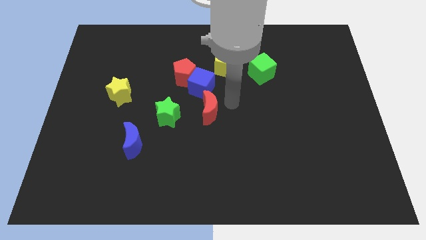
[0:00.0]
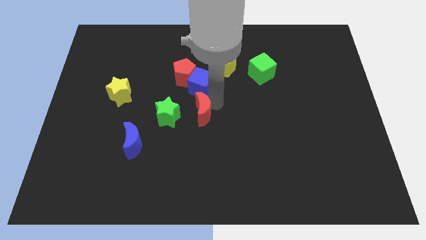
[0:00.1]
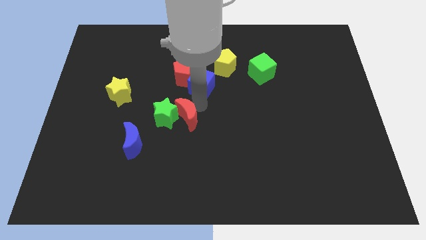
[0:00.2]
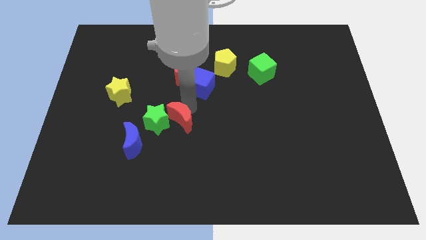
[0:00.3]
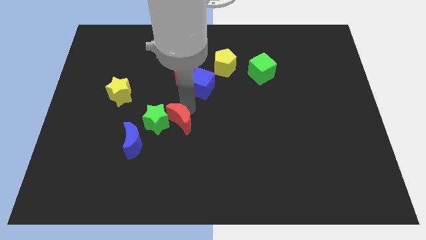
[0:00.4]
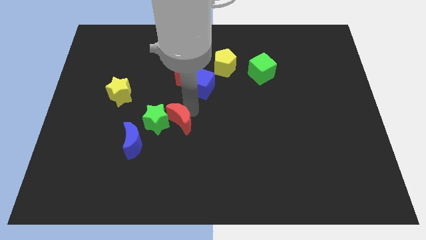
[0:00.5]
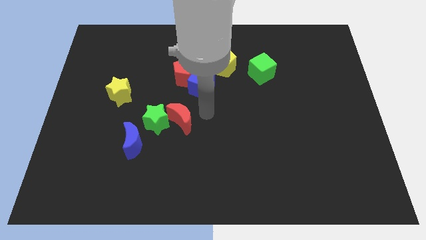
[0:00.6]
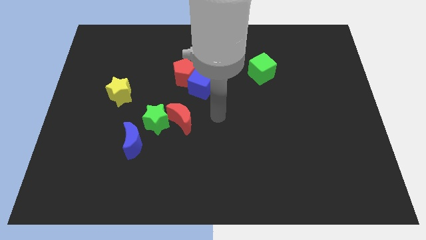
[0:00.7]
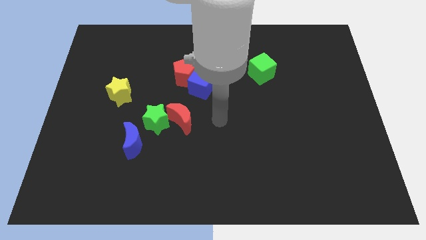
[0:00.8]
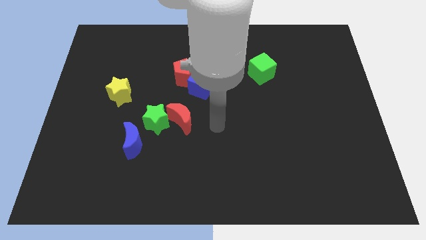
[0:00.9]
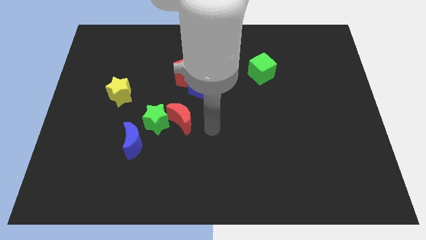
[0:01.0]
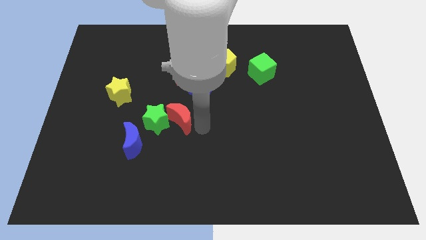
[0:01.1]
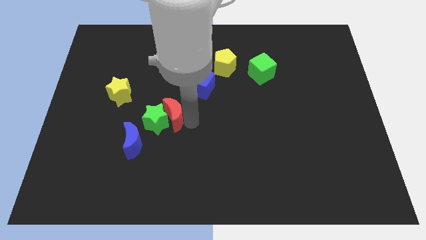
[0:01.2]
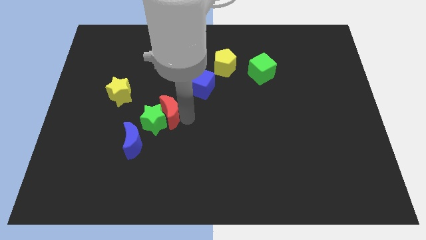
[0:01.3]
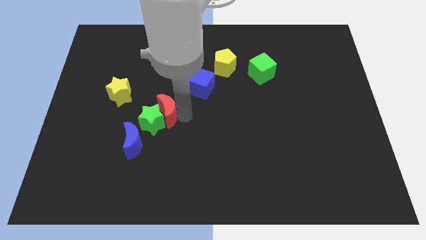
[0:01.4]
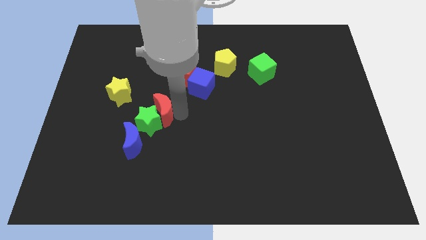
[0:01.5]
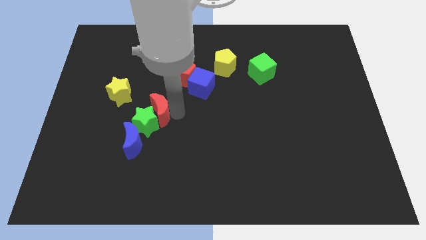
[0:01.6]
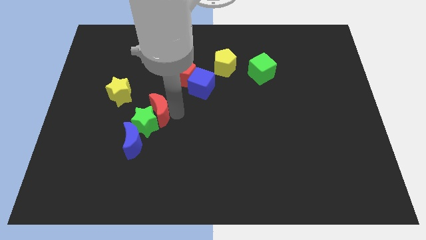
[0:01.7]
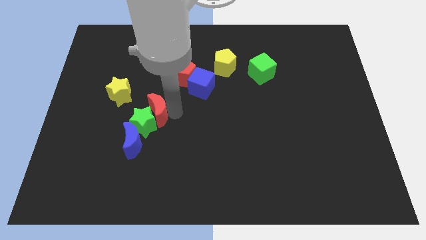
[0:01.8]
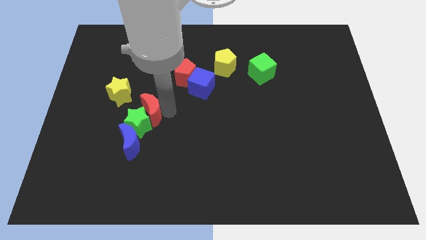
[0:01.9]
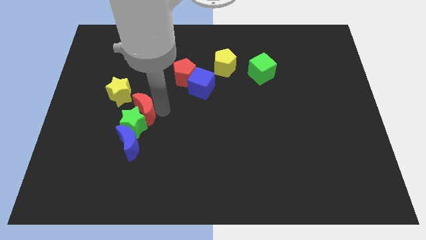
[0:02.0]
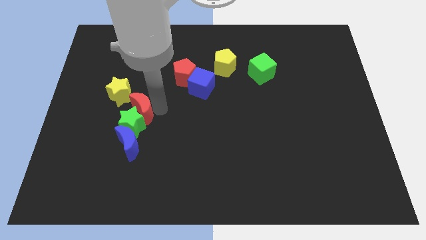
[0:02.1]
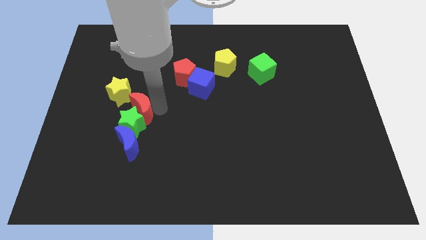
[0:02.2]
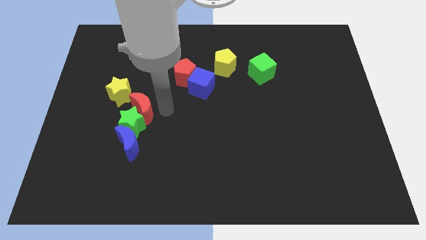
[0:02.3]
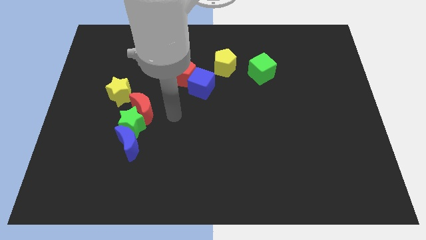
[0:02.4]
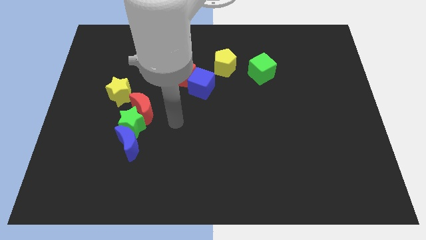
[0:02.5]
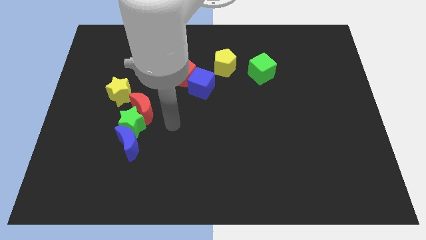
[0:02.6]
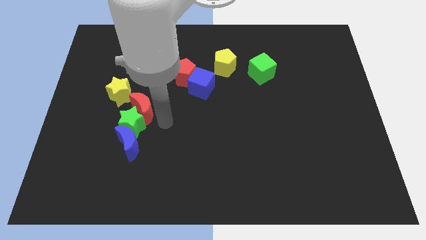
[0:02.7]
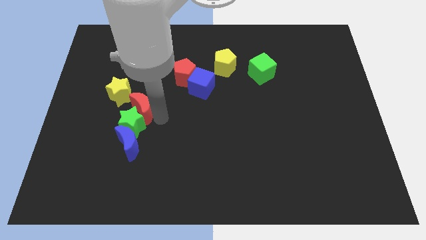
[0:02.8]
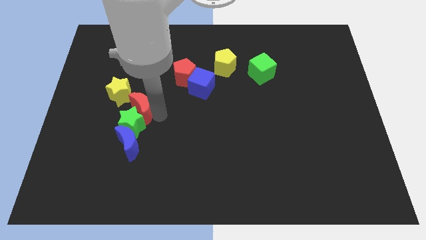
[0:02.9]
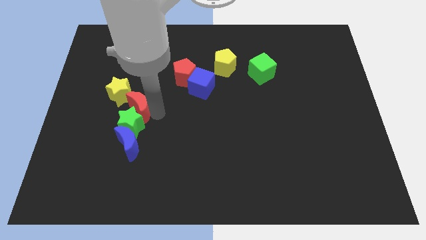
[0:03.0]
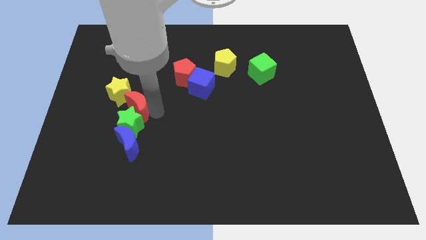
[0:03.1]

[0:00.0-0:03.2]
move the red crescent into the green star

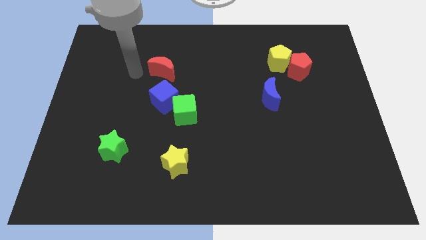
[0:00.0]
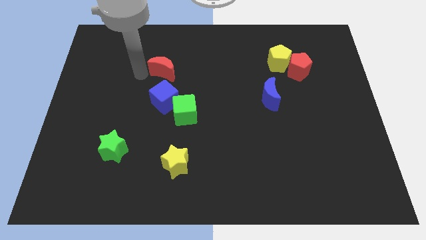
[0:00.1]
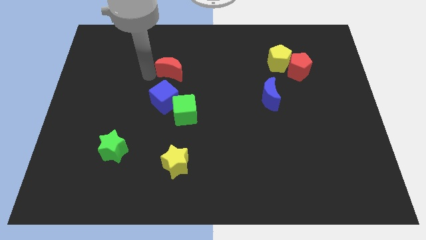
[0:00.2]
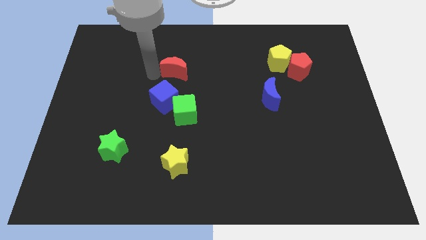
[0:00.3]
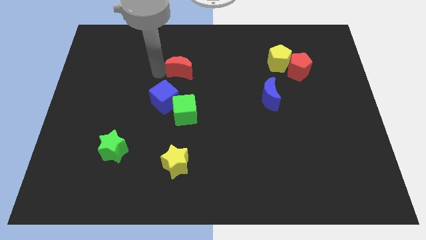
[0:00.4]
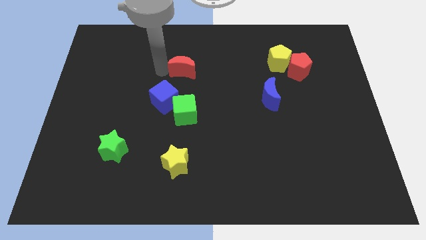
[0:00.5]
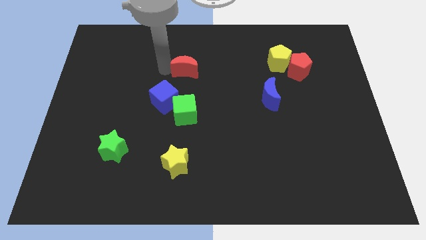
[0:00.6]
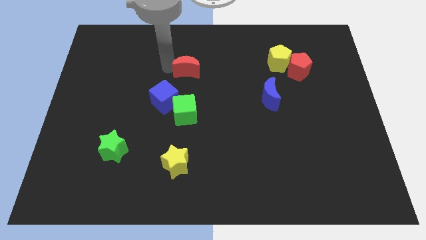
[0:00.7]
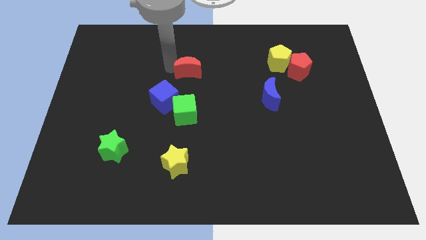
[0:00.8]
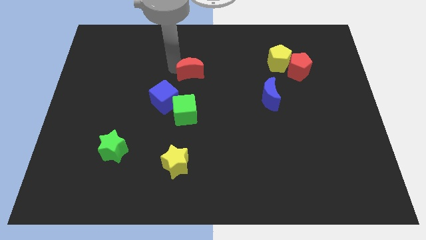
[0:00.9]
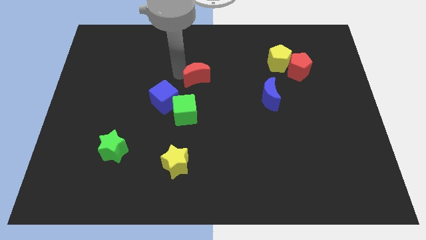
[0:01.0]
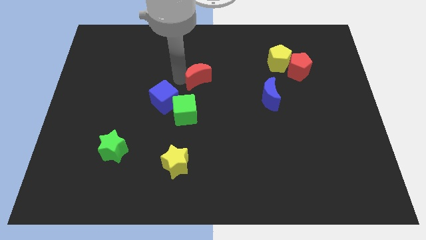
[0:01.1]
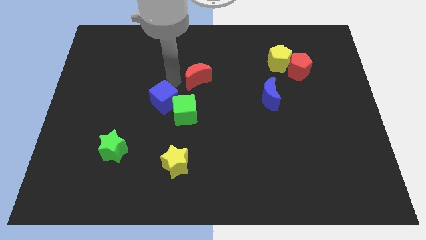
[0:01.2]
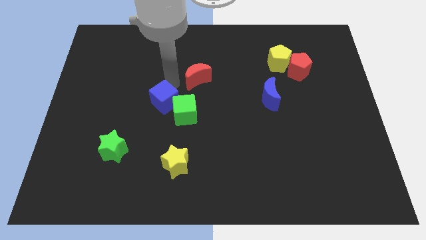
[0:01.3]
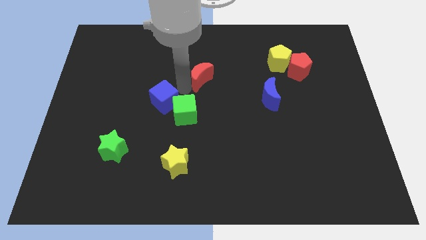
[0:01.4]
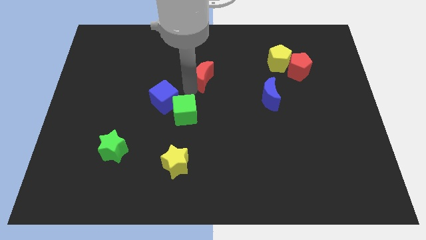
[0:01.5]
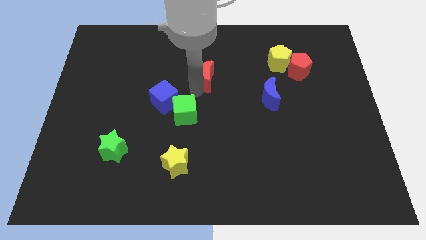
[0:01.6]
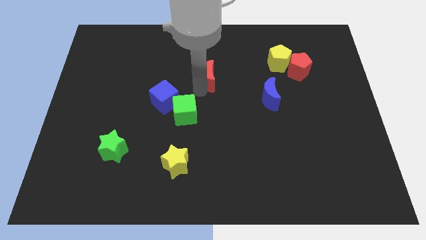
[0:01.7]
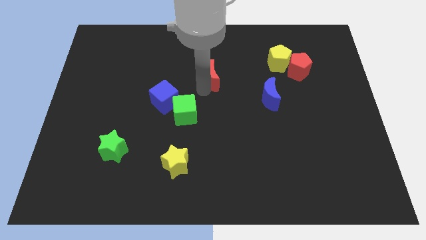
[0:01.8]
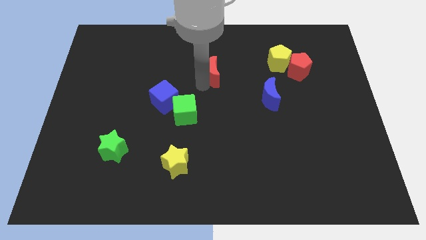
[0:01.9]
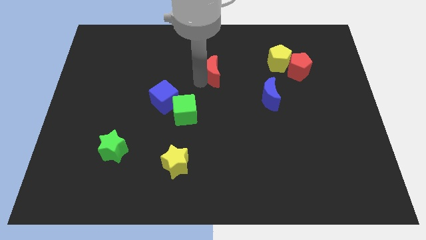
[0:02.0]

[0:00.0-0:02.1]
move the red crescent towards the top right of the green cube

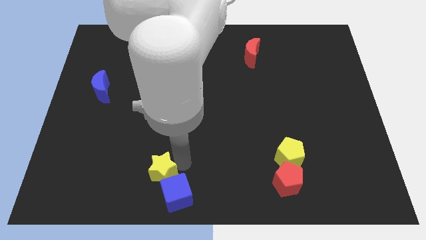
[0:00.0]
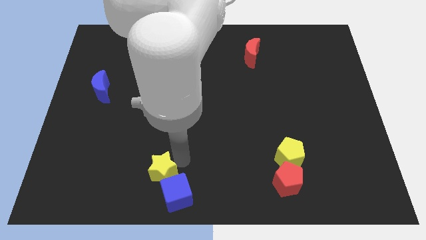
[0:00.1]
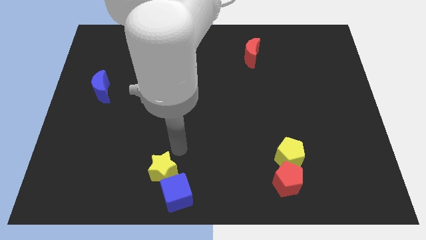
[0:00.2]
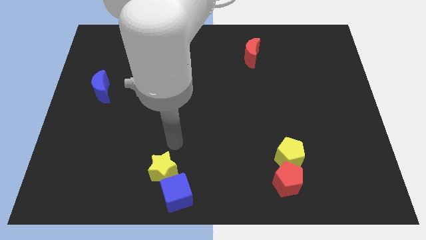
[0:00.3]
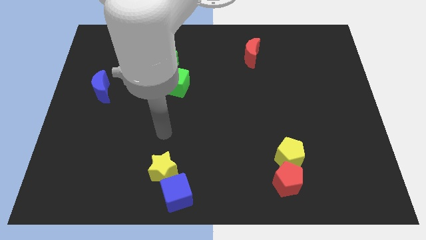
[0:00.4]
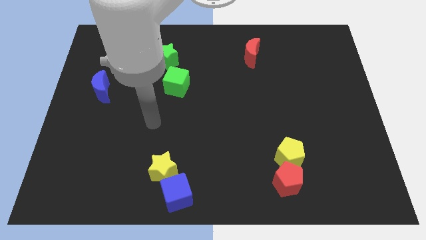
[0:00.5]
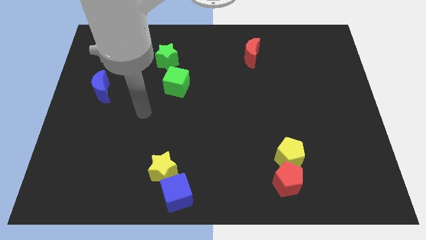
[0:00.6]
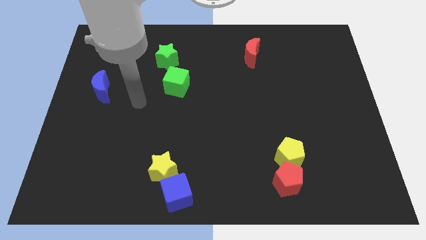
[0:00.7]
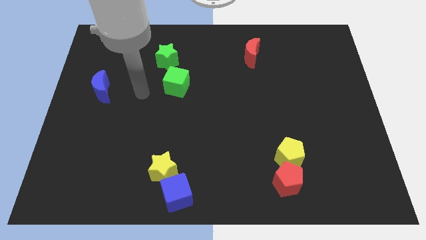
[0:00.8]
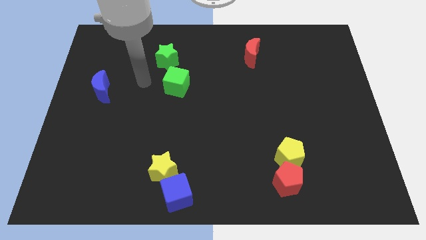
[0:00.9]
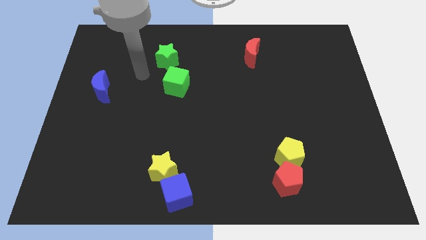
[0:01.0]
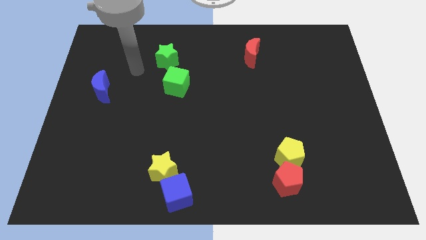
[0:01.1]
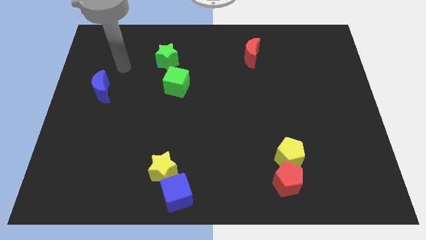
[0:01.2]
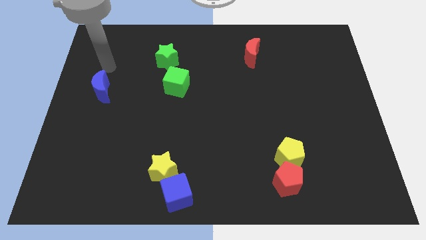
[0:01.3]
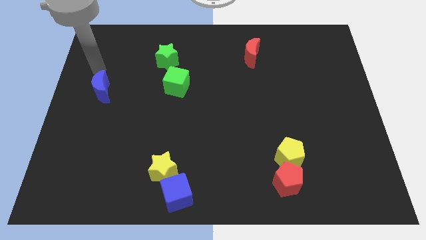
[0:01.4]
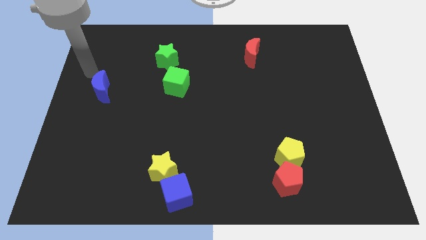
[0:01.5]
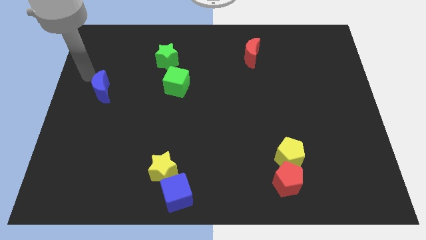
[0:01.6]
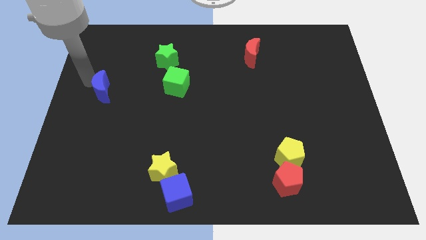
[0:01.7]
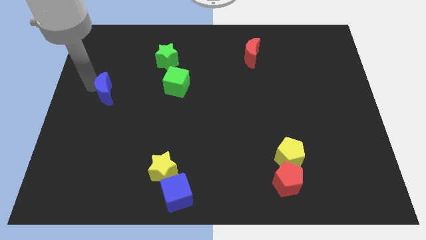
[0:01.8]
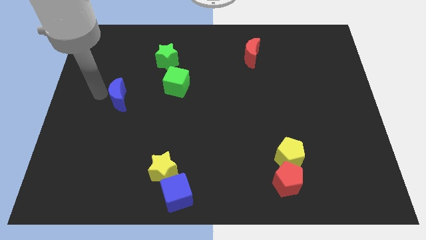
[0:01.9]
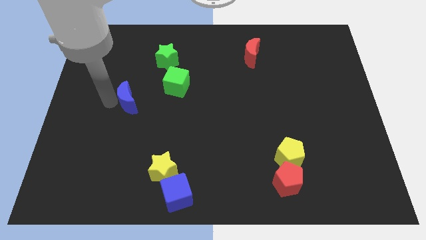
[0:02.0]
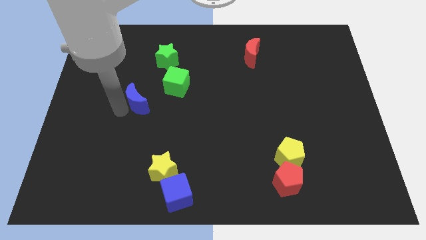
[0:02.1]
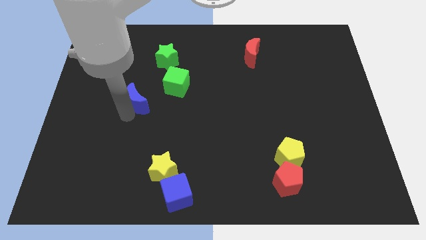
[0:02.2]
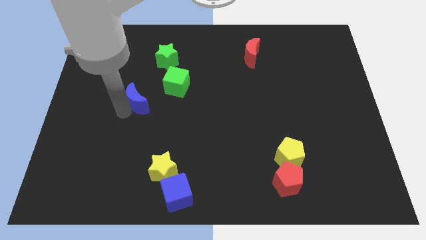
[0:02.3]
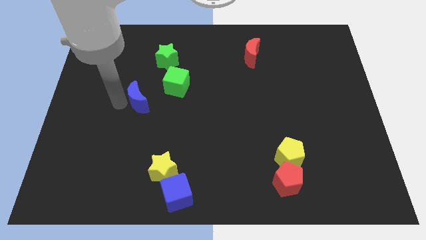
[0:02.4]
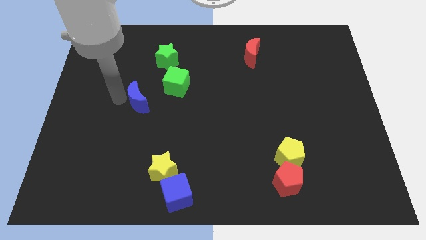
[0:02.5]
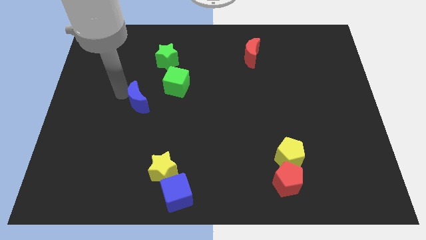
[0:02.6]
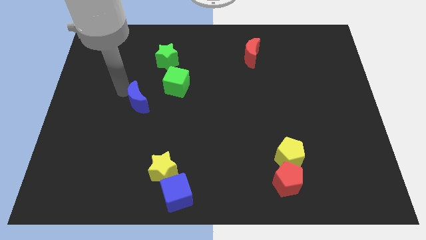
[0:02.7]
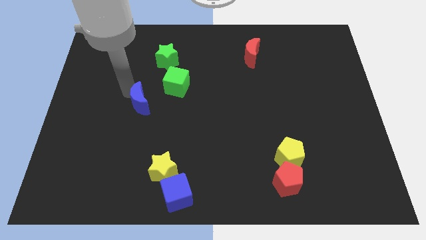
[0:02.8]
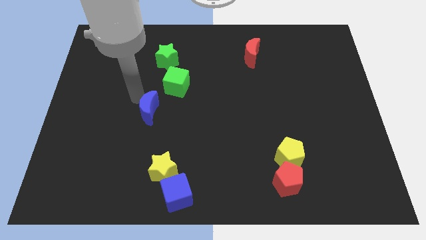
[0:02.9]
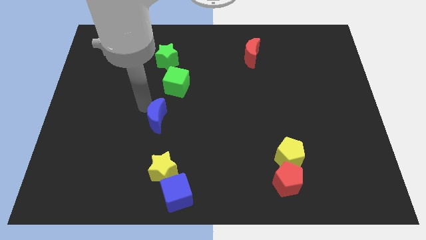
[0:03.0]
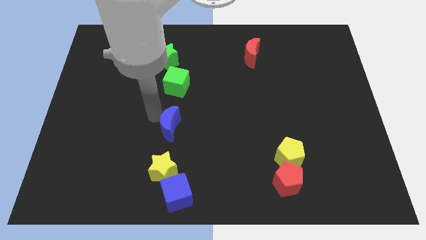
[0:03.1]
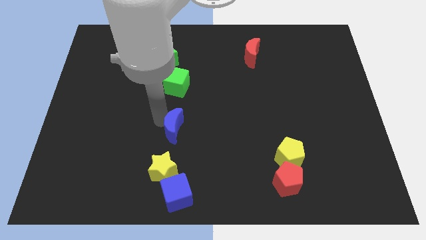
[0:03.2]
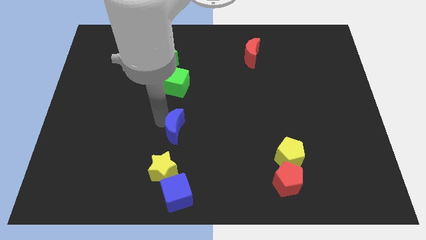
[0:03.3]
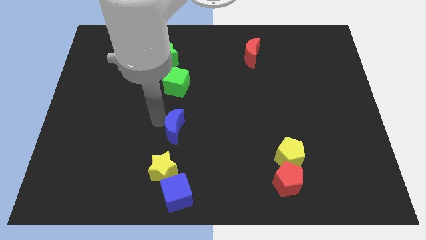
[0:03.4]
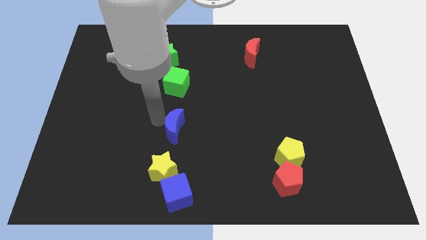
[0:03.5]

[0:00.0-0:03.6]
move the blue moon below the green cube

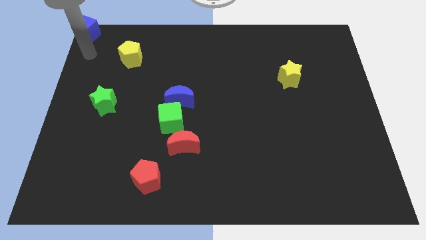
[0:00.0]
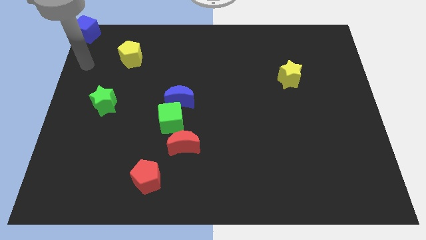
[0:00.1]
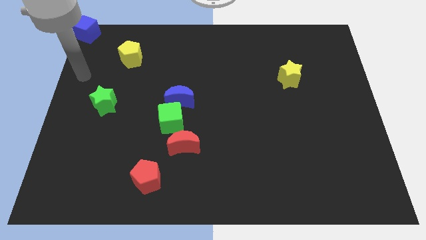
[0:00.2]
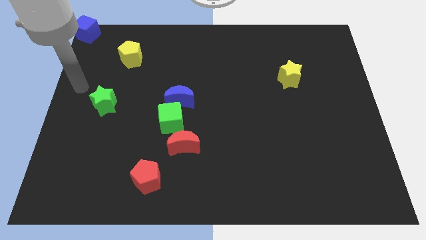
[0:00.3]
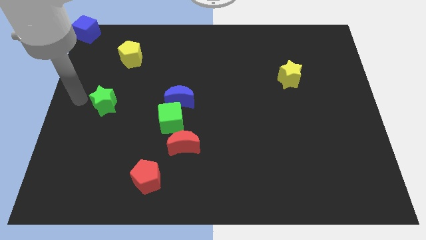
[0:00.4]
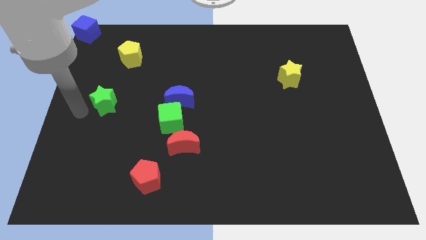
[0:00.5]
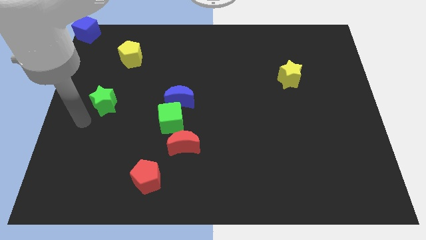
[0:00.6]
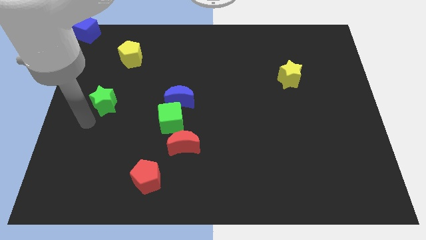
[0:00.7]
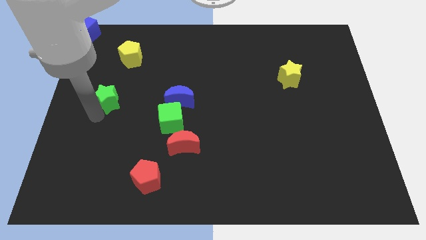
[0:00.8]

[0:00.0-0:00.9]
tap the green star
